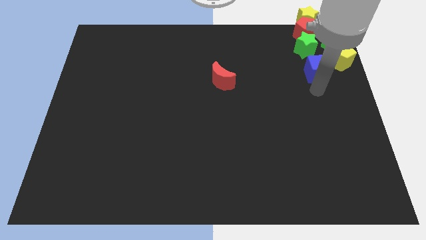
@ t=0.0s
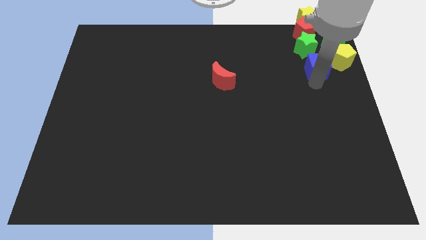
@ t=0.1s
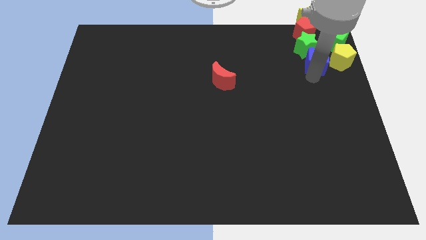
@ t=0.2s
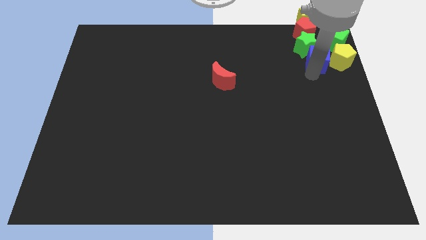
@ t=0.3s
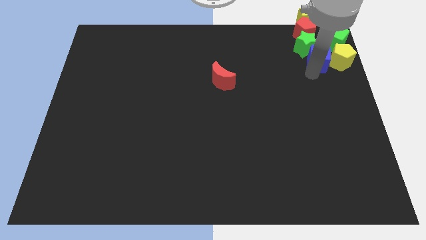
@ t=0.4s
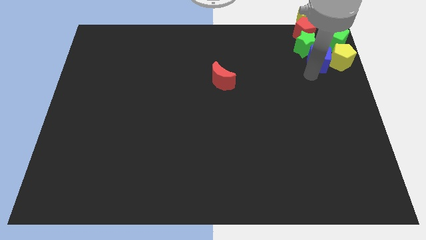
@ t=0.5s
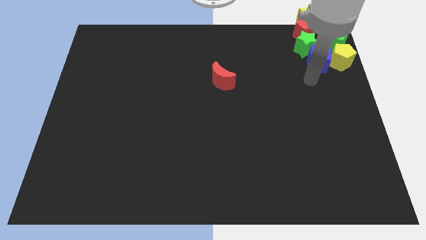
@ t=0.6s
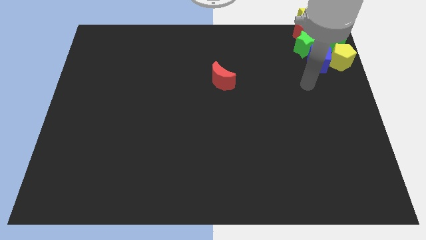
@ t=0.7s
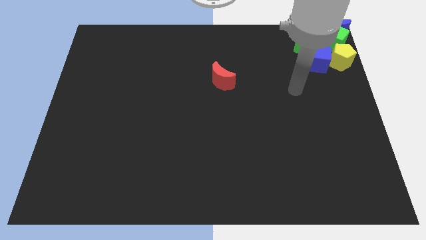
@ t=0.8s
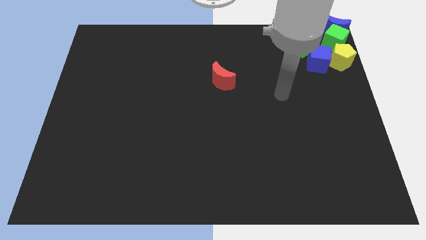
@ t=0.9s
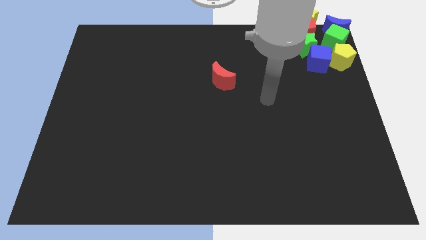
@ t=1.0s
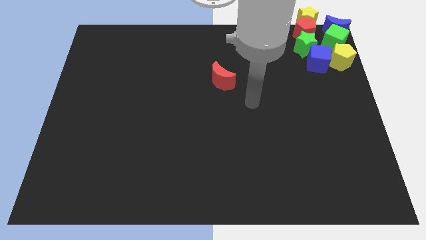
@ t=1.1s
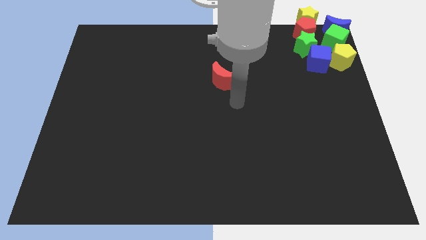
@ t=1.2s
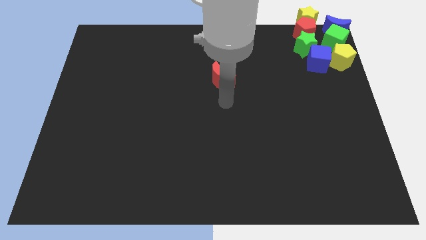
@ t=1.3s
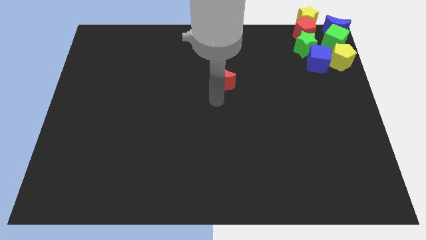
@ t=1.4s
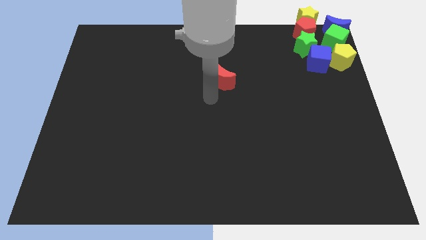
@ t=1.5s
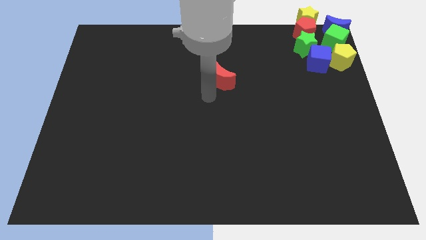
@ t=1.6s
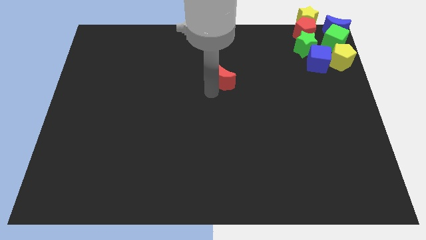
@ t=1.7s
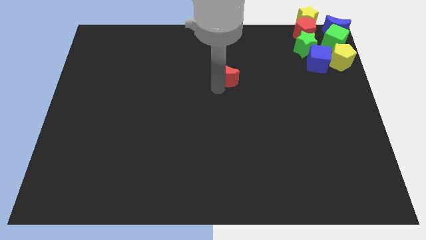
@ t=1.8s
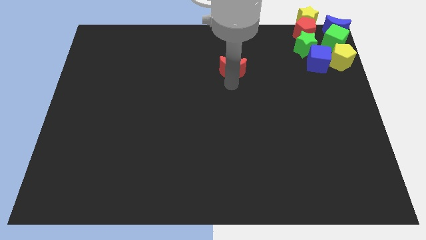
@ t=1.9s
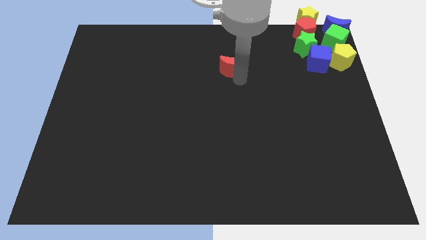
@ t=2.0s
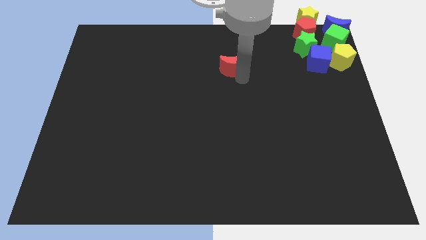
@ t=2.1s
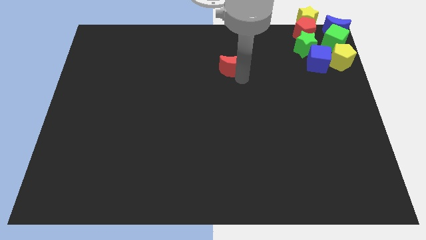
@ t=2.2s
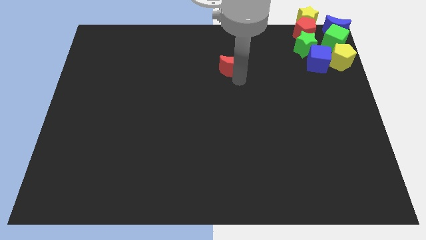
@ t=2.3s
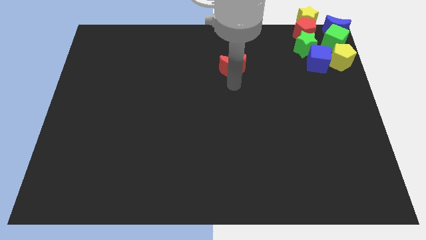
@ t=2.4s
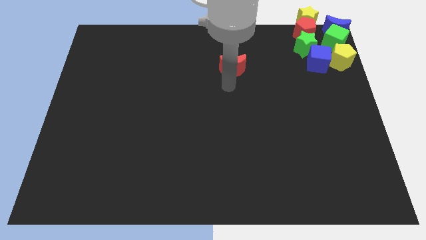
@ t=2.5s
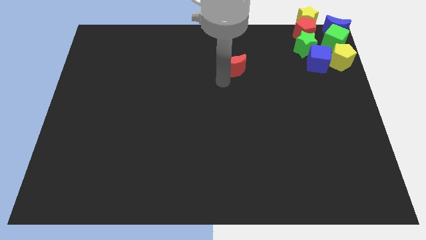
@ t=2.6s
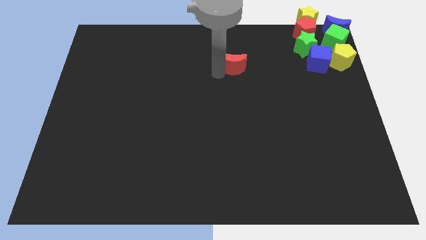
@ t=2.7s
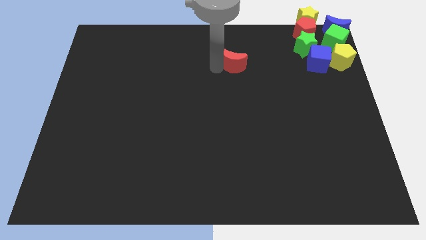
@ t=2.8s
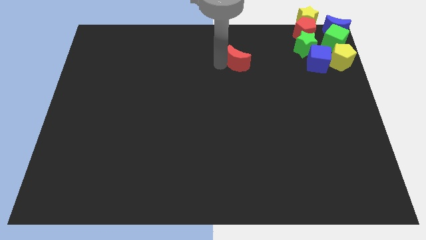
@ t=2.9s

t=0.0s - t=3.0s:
slightly move the red moon towards up

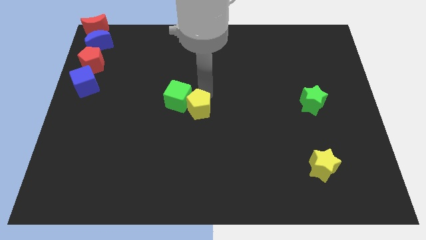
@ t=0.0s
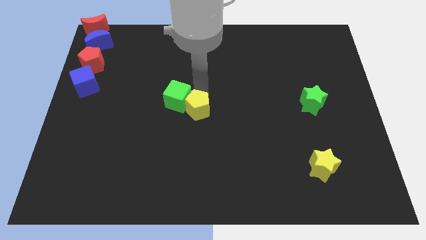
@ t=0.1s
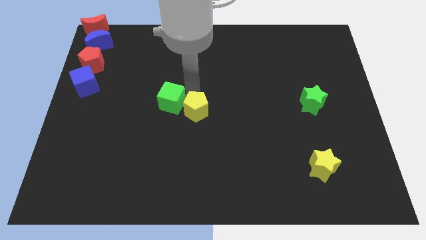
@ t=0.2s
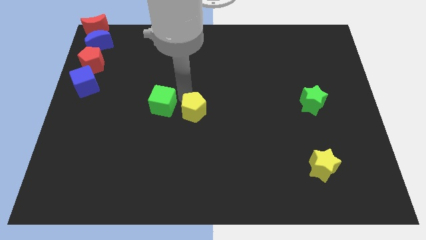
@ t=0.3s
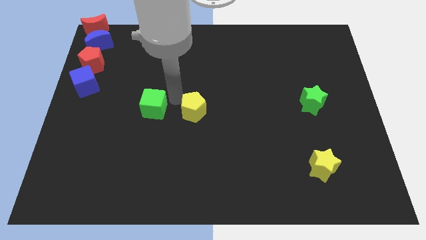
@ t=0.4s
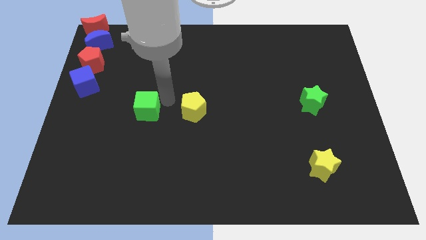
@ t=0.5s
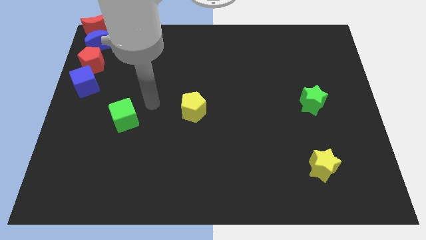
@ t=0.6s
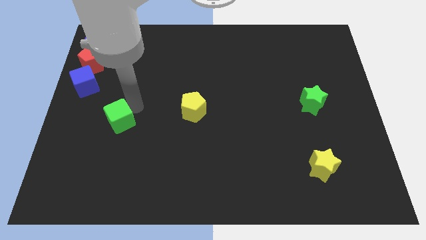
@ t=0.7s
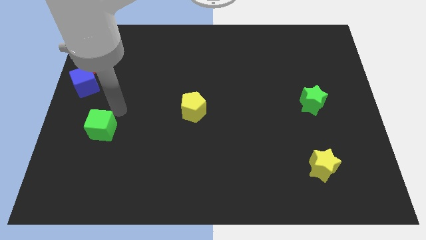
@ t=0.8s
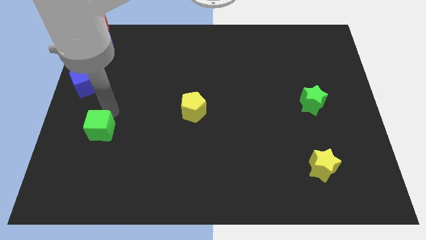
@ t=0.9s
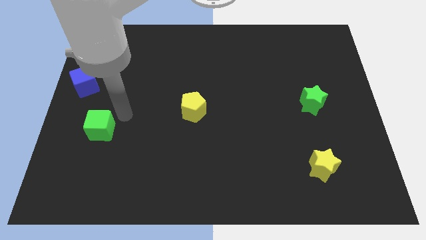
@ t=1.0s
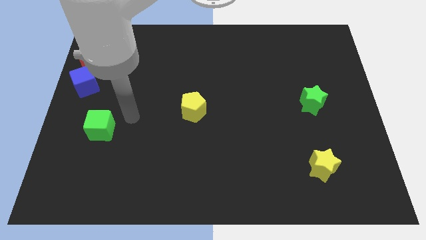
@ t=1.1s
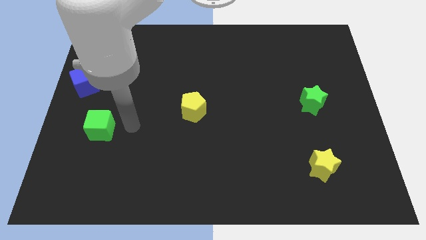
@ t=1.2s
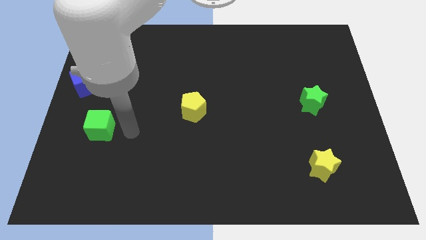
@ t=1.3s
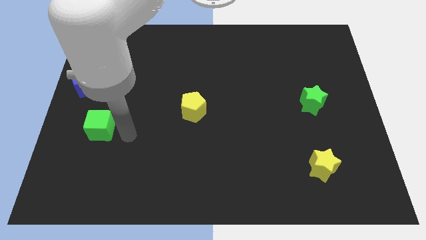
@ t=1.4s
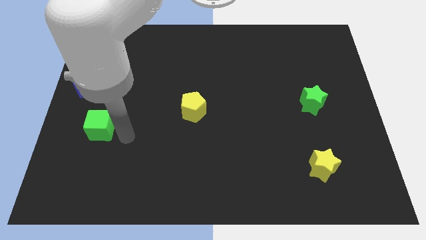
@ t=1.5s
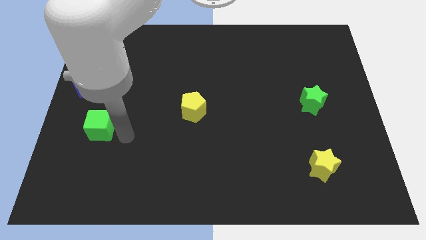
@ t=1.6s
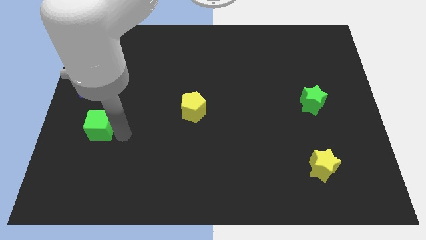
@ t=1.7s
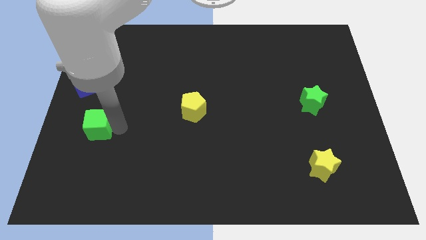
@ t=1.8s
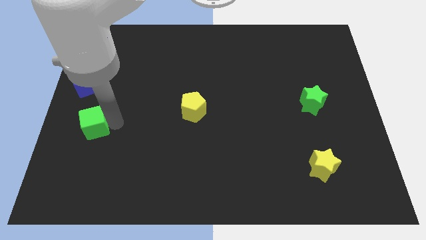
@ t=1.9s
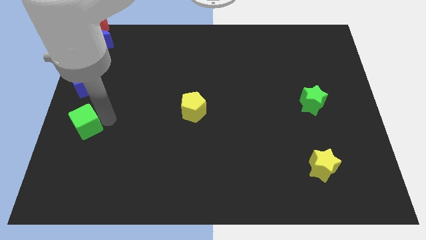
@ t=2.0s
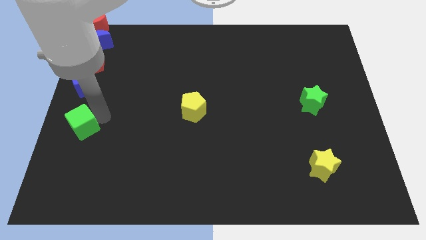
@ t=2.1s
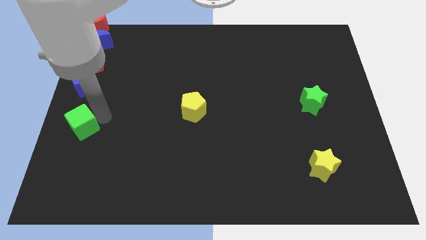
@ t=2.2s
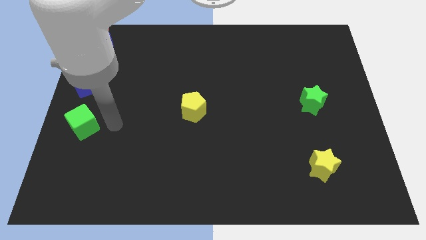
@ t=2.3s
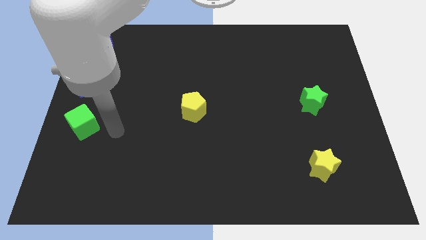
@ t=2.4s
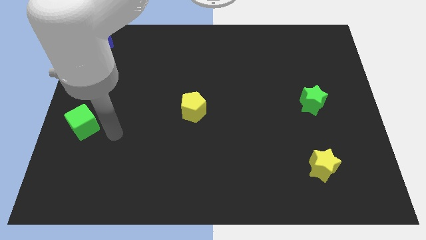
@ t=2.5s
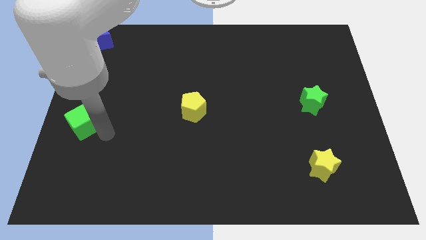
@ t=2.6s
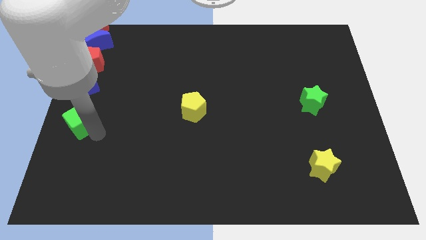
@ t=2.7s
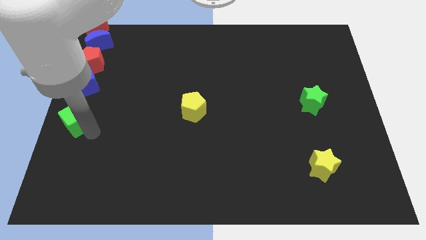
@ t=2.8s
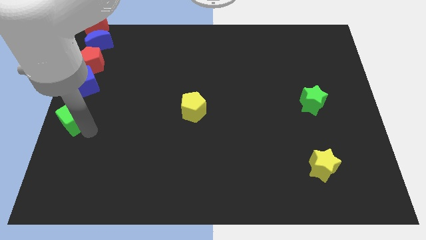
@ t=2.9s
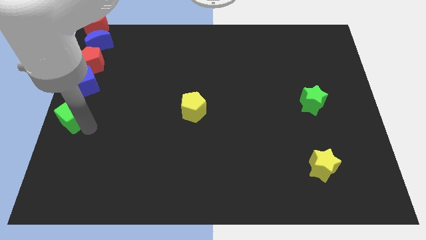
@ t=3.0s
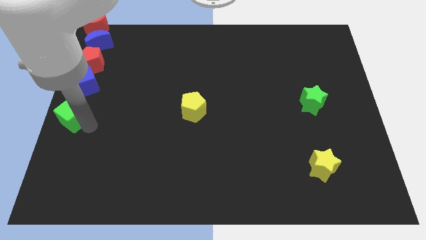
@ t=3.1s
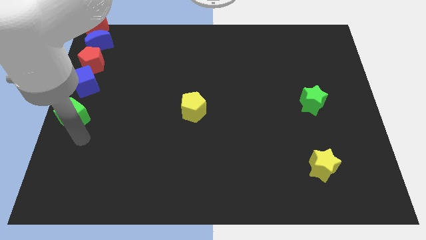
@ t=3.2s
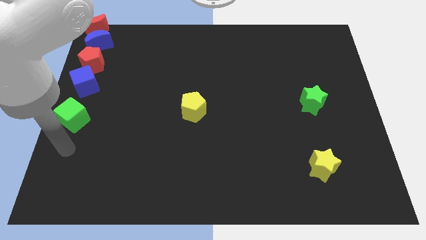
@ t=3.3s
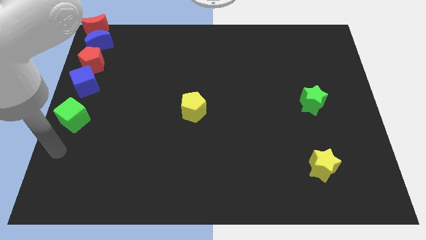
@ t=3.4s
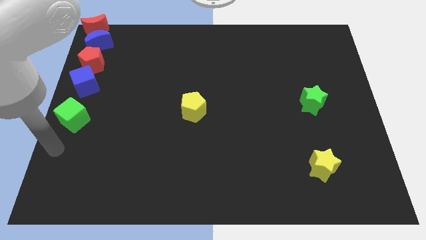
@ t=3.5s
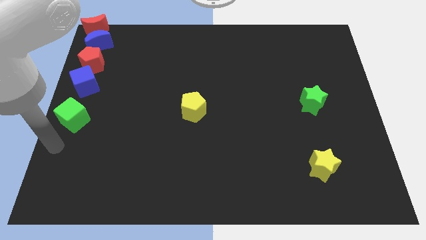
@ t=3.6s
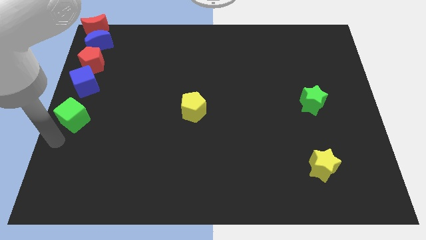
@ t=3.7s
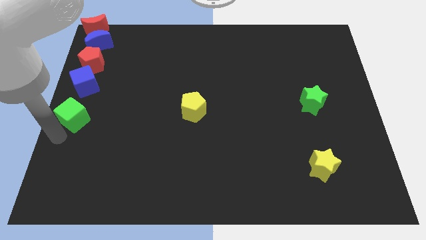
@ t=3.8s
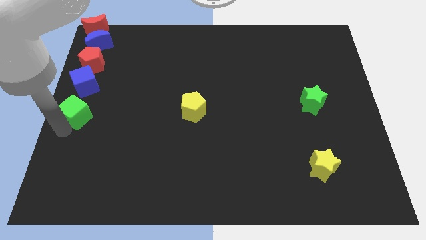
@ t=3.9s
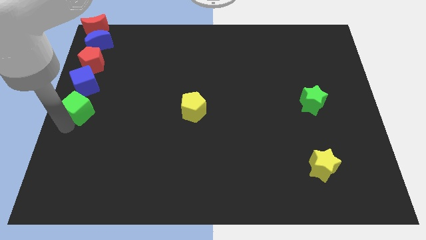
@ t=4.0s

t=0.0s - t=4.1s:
push green cube away from yellow pentagon

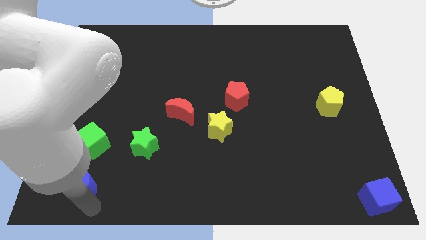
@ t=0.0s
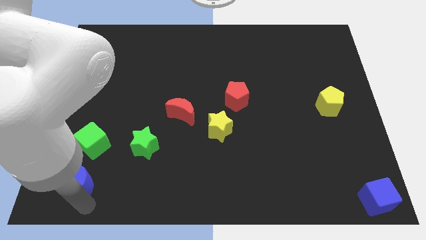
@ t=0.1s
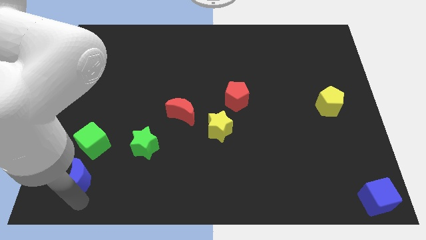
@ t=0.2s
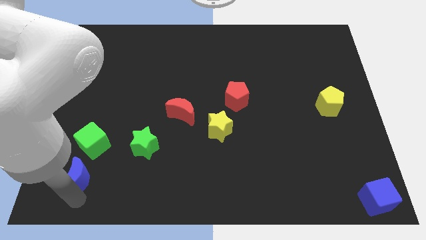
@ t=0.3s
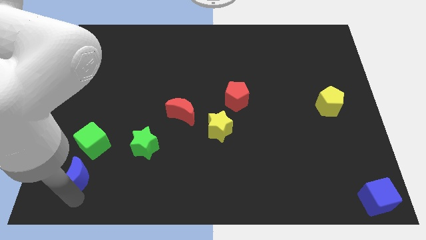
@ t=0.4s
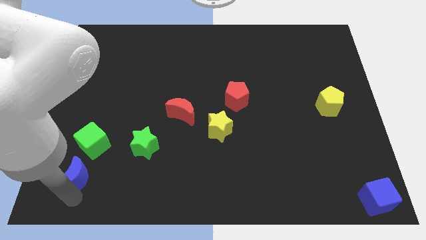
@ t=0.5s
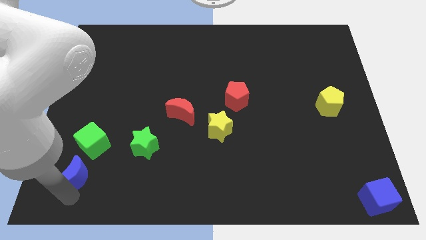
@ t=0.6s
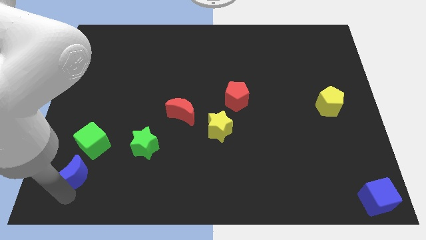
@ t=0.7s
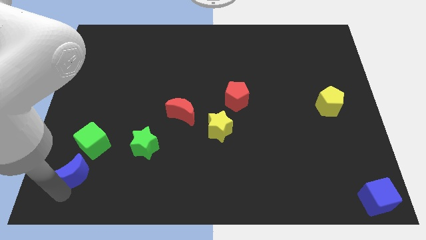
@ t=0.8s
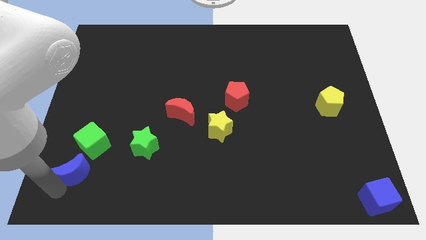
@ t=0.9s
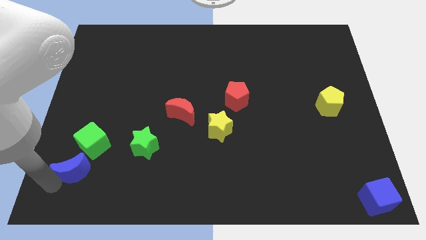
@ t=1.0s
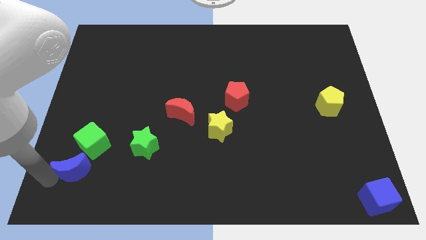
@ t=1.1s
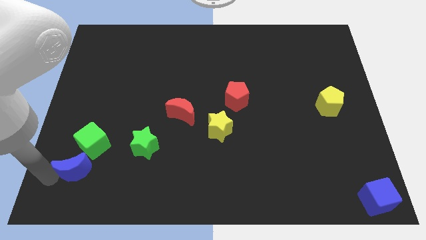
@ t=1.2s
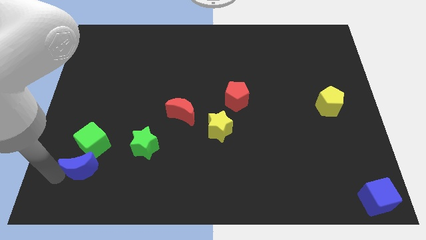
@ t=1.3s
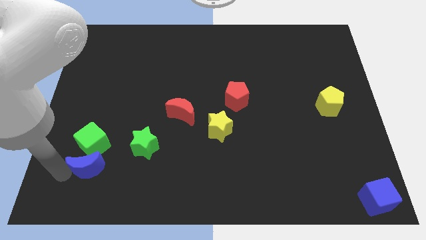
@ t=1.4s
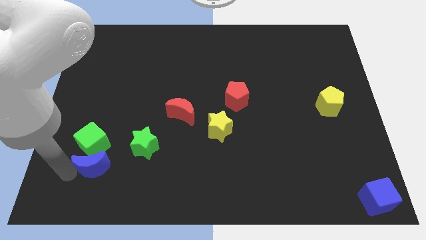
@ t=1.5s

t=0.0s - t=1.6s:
place the blue moon below the green cube

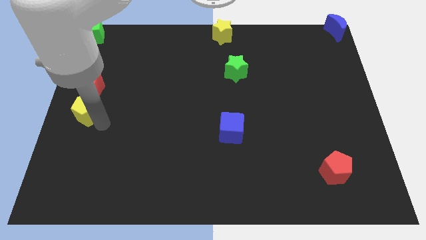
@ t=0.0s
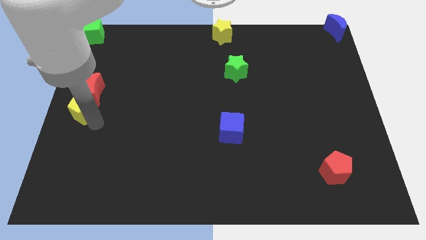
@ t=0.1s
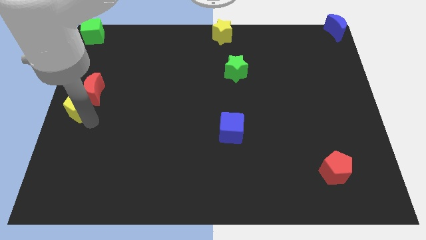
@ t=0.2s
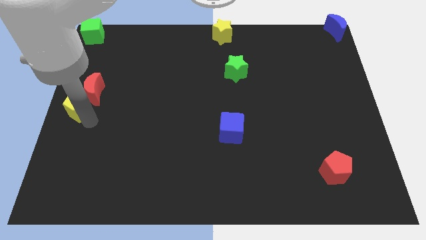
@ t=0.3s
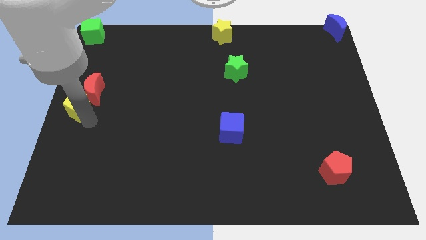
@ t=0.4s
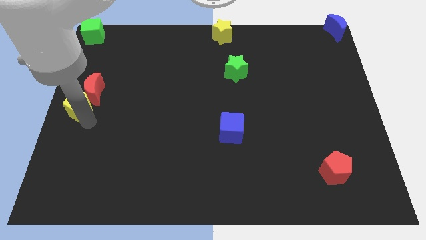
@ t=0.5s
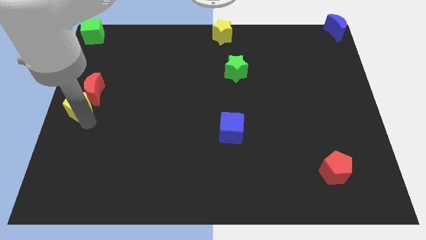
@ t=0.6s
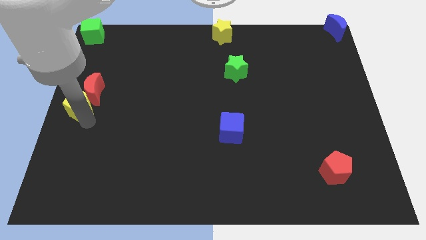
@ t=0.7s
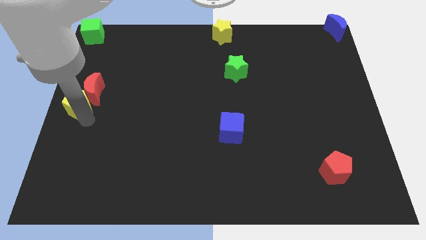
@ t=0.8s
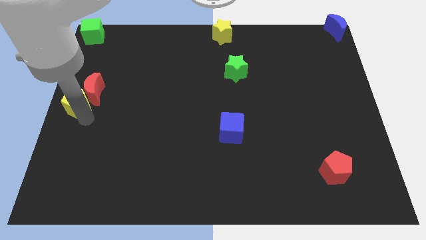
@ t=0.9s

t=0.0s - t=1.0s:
move the yellow pentagon to the left center of the board
